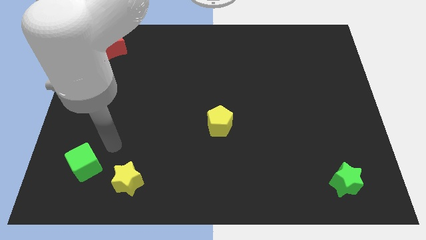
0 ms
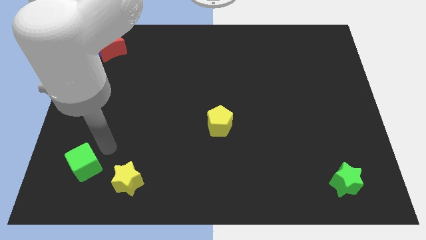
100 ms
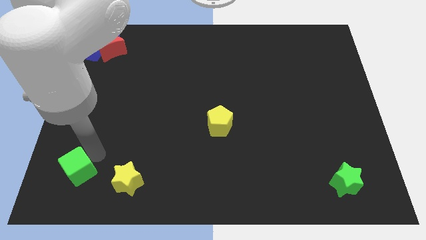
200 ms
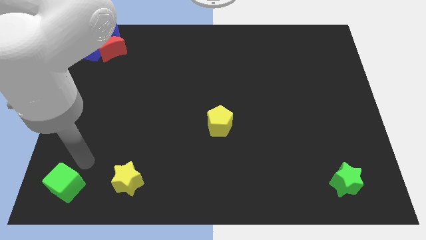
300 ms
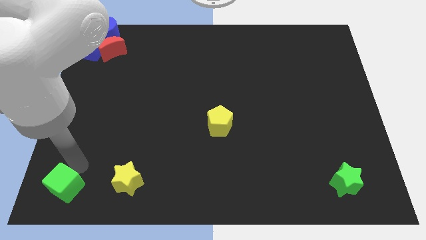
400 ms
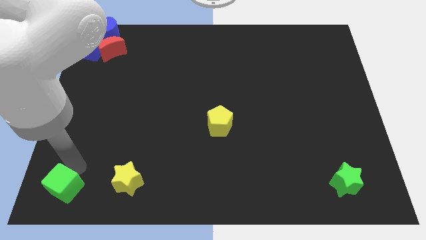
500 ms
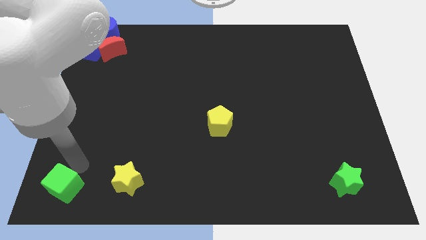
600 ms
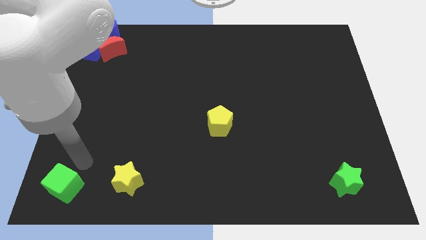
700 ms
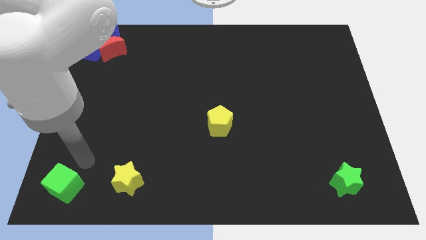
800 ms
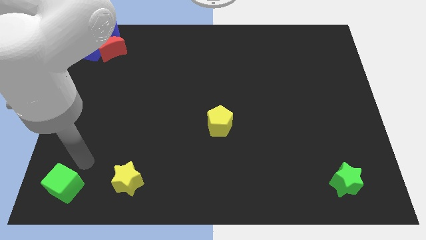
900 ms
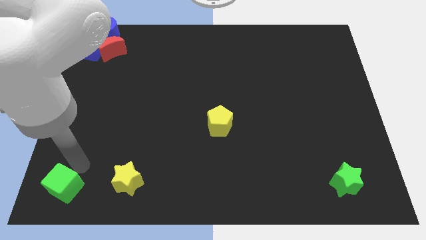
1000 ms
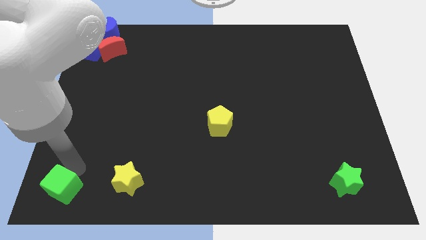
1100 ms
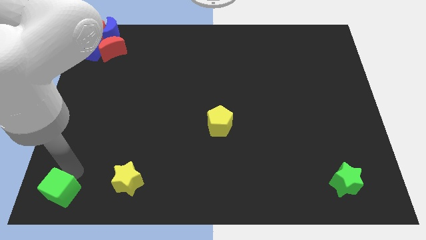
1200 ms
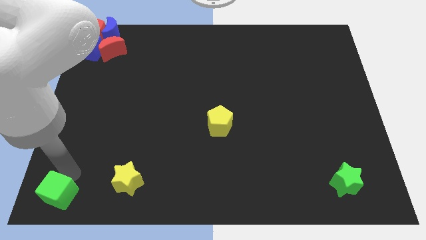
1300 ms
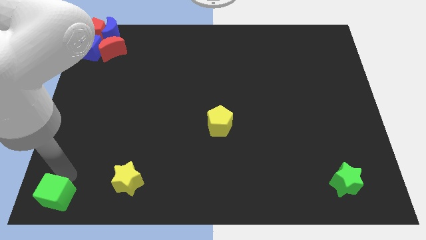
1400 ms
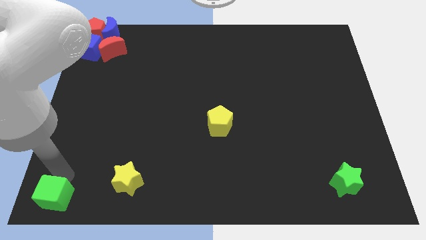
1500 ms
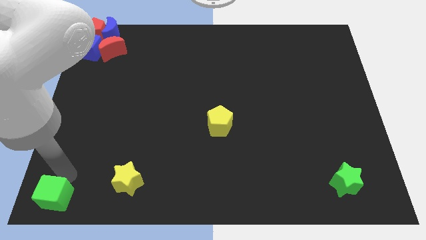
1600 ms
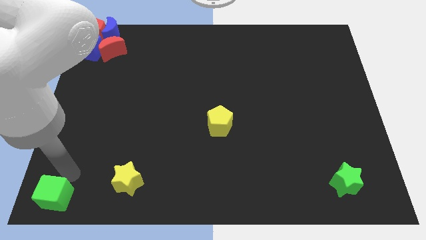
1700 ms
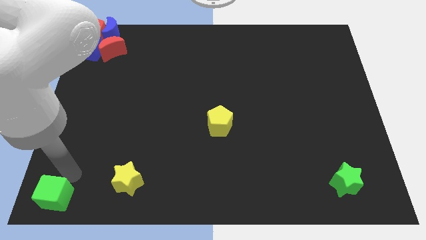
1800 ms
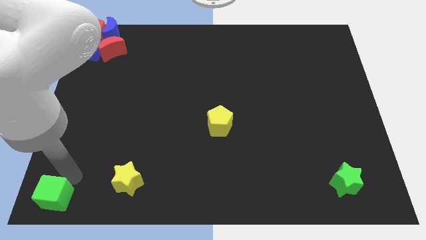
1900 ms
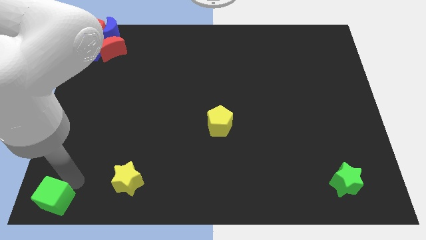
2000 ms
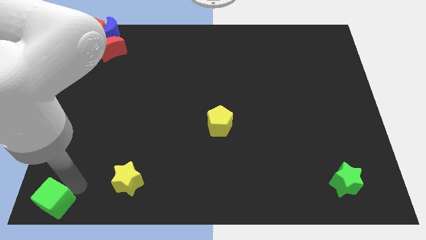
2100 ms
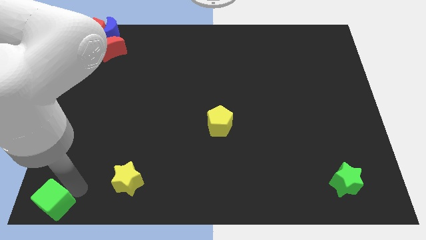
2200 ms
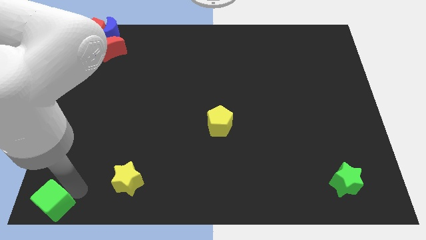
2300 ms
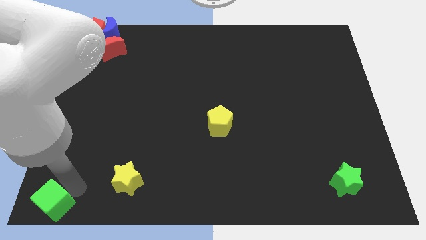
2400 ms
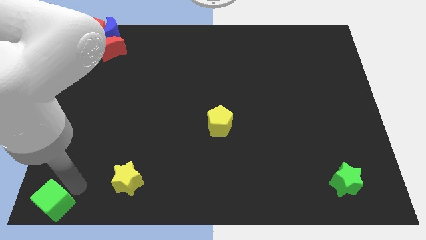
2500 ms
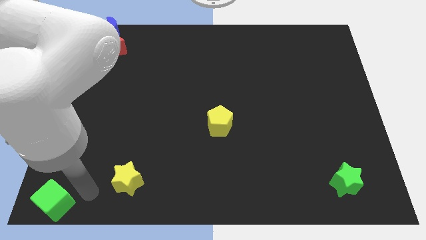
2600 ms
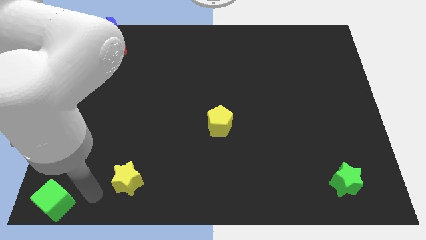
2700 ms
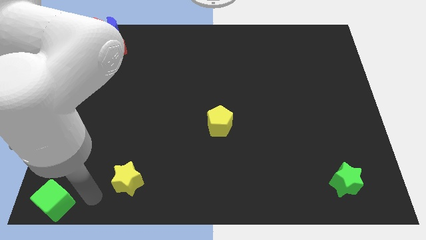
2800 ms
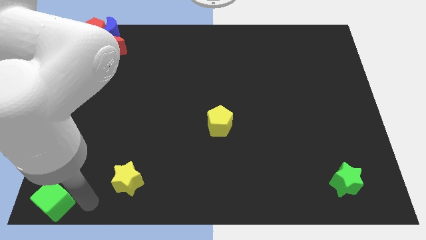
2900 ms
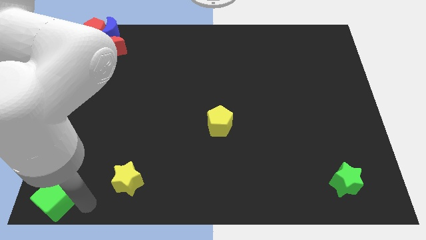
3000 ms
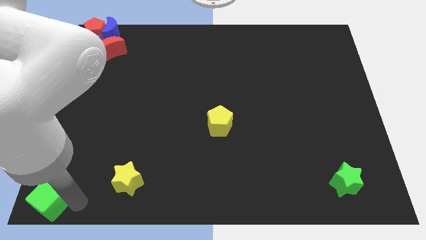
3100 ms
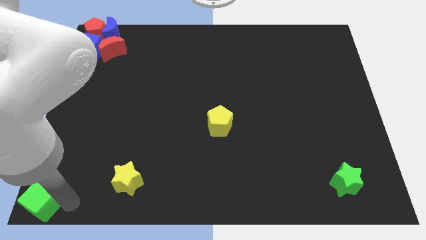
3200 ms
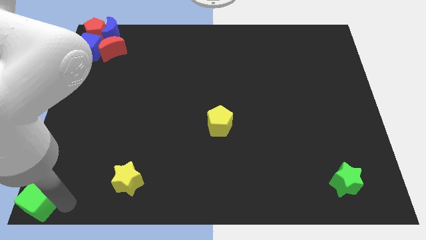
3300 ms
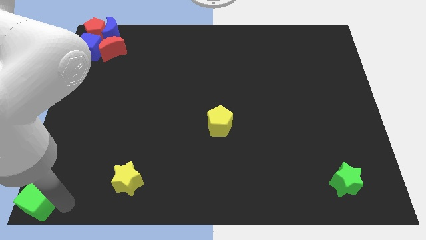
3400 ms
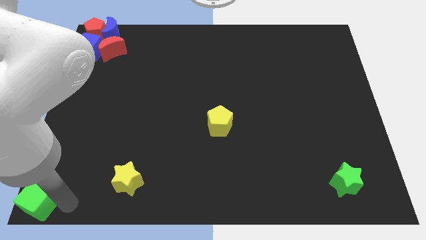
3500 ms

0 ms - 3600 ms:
drag the gren cube to the bottom left corner of the table

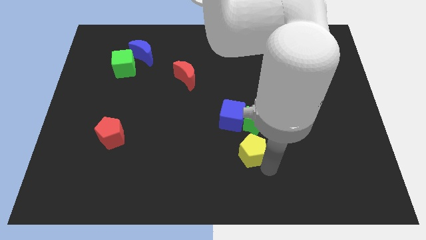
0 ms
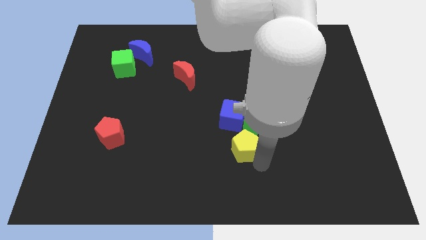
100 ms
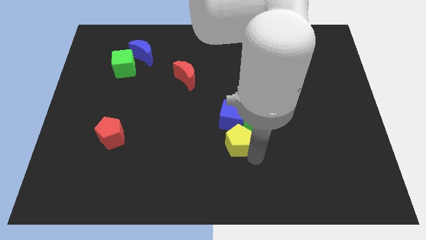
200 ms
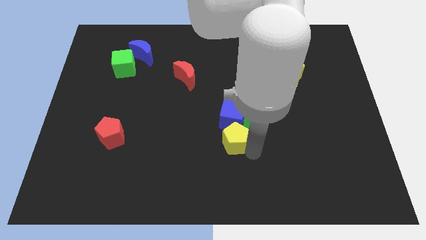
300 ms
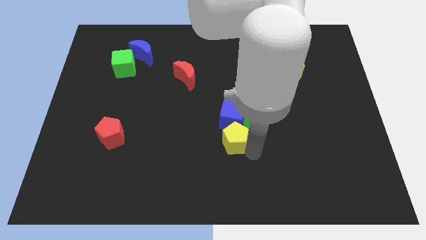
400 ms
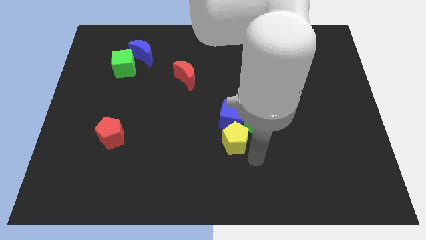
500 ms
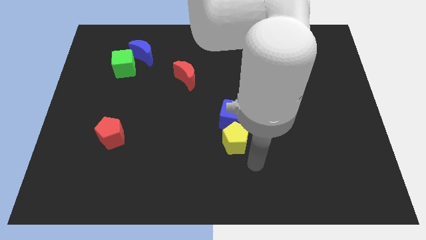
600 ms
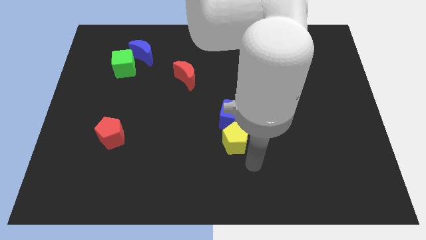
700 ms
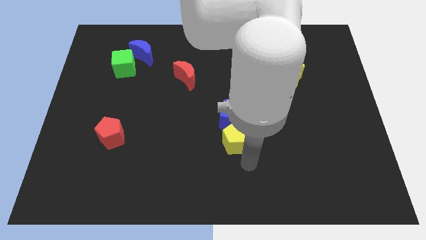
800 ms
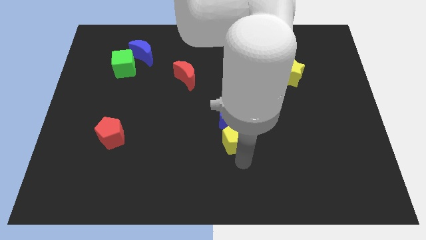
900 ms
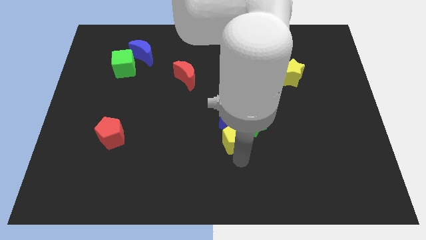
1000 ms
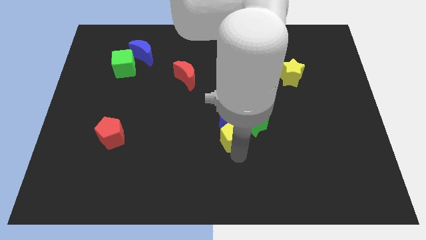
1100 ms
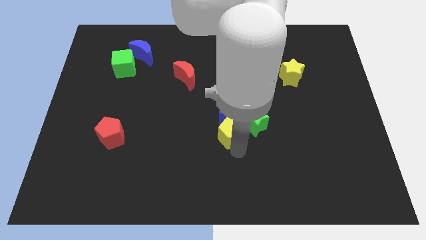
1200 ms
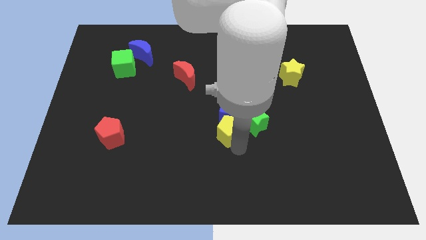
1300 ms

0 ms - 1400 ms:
move yellow pentagon to the bottom of the blue cube

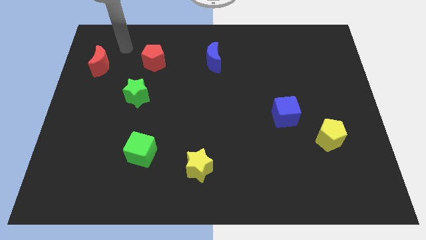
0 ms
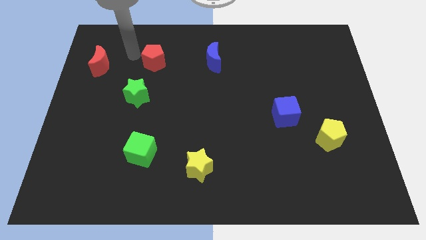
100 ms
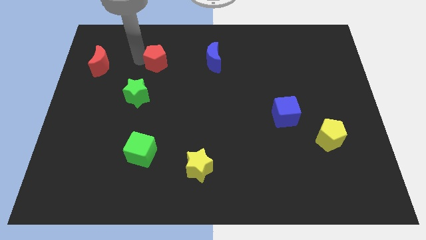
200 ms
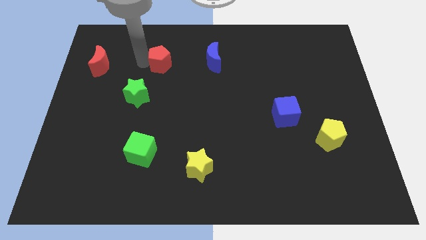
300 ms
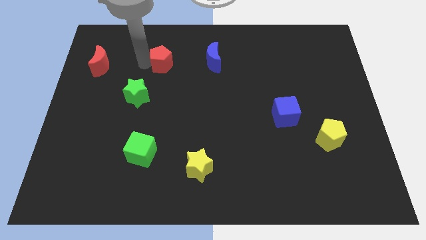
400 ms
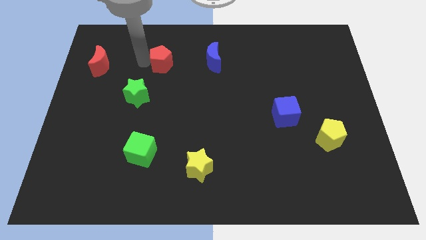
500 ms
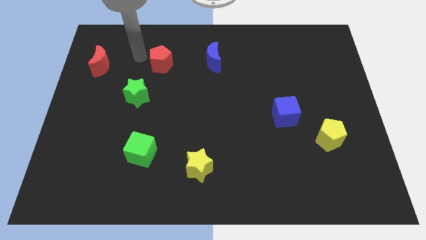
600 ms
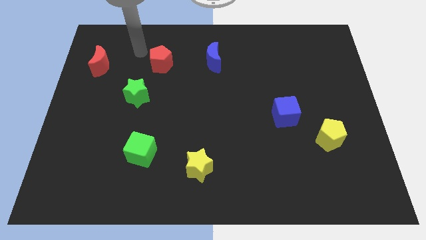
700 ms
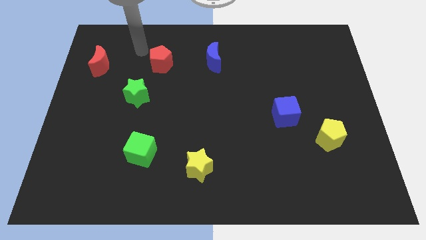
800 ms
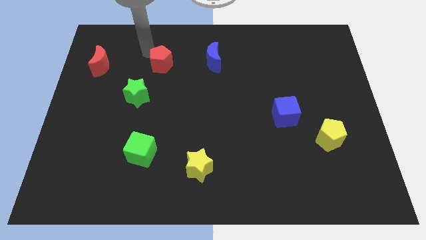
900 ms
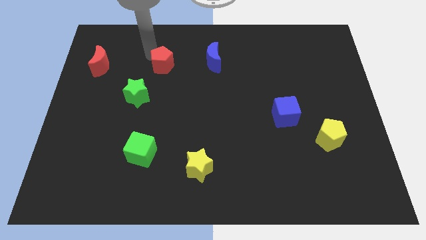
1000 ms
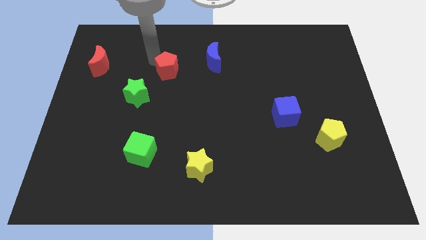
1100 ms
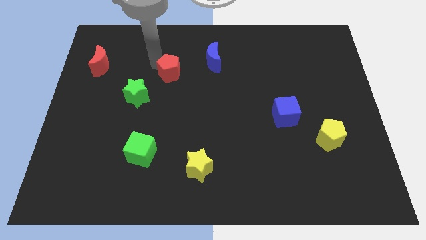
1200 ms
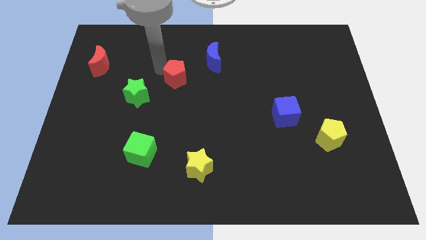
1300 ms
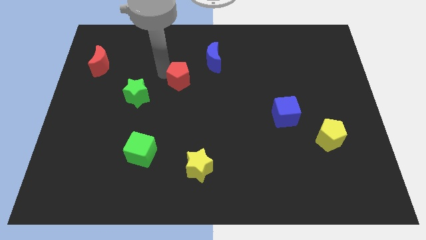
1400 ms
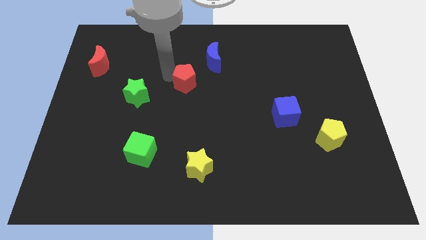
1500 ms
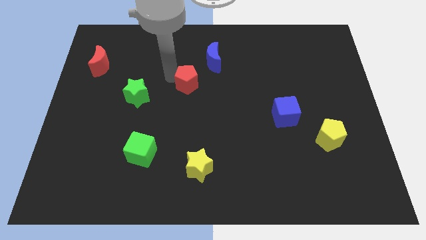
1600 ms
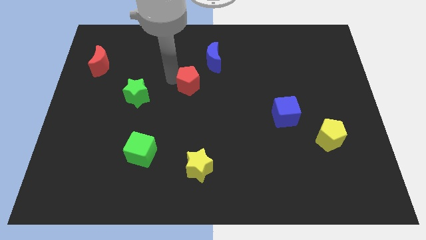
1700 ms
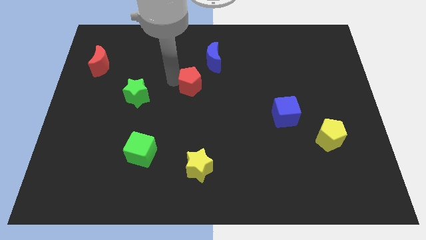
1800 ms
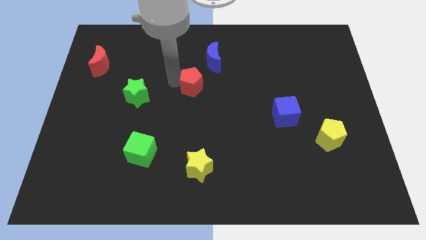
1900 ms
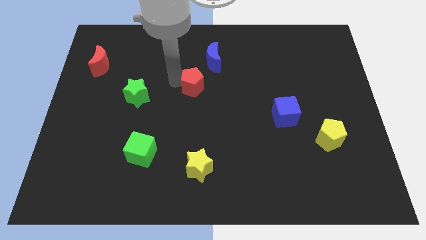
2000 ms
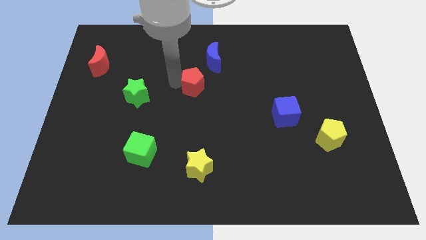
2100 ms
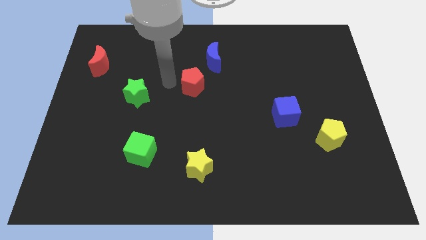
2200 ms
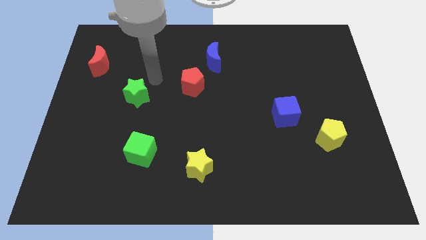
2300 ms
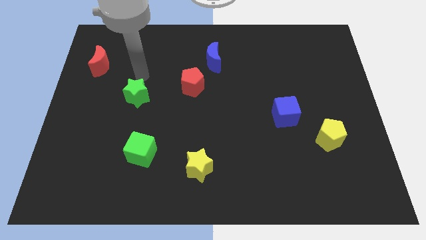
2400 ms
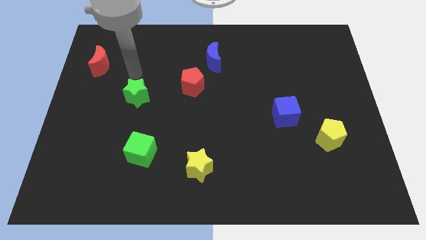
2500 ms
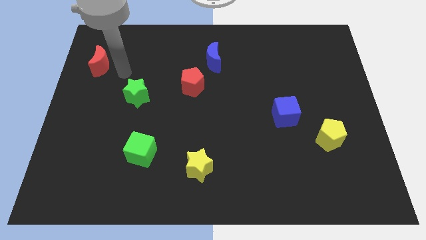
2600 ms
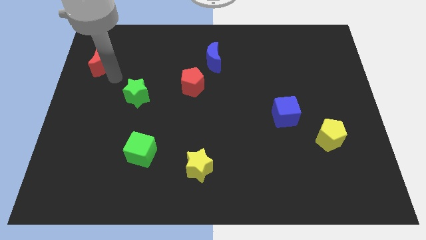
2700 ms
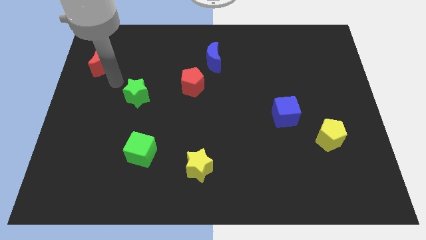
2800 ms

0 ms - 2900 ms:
push the red pentagon to the right side of the board

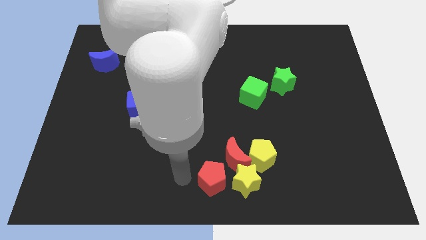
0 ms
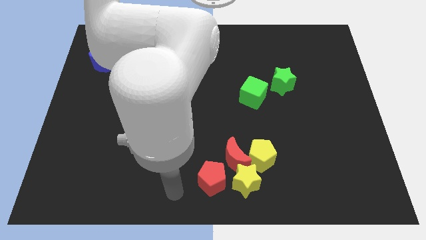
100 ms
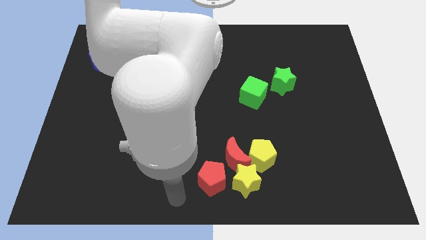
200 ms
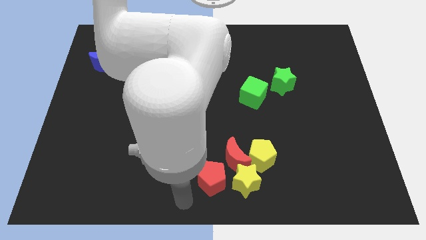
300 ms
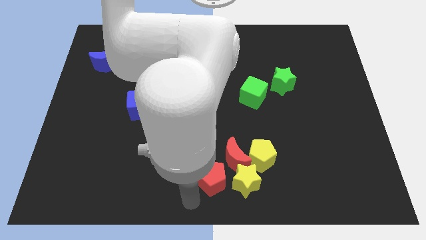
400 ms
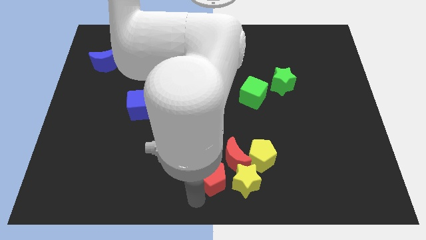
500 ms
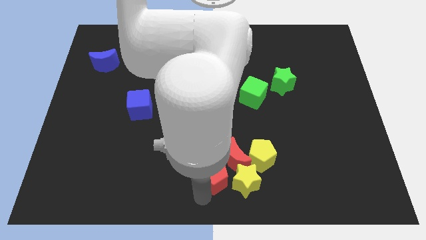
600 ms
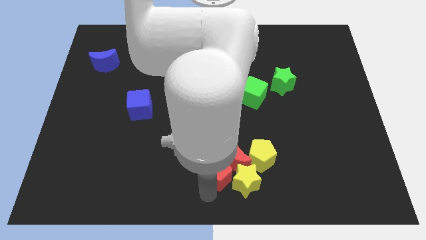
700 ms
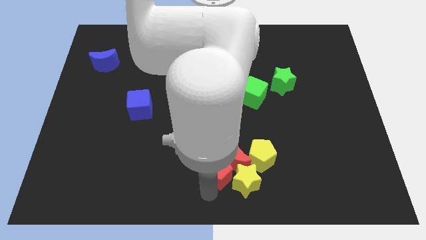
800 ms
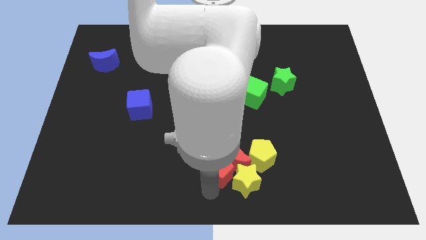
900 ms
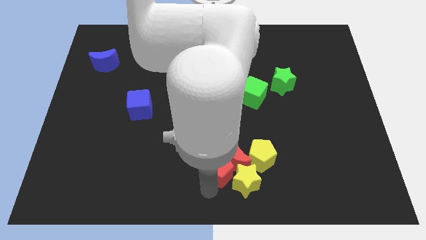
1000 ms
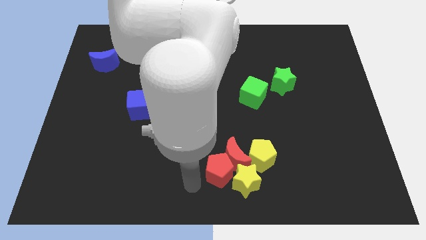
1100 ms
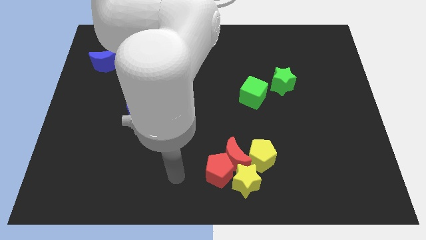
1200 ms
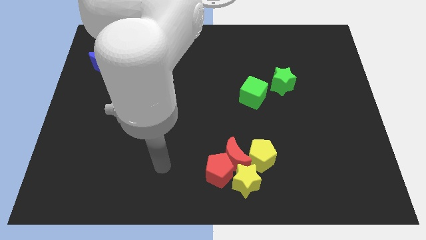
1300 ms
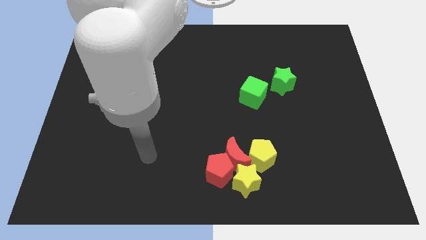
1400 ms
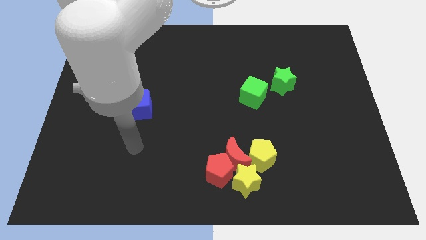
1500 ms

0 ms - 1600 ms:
place the red pentagon near the red crescent
